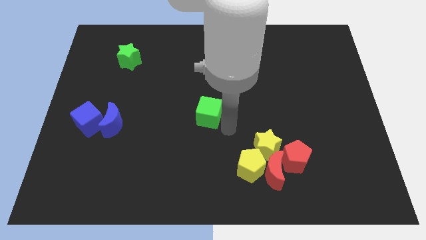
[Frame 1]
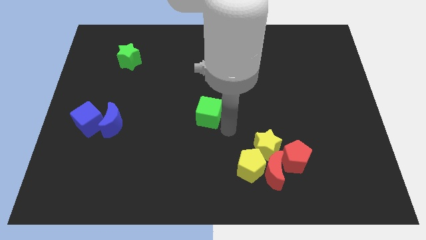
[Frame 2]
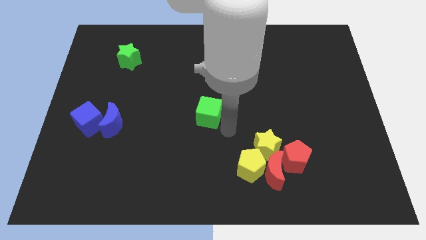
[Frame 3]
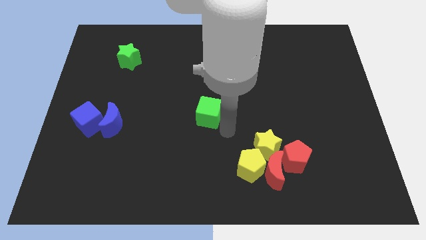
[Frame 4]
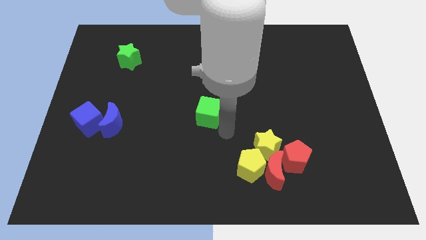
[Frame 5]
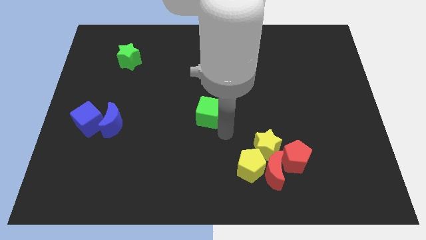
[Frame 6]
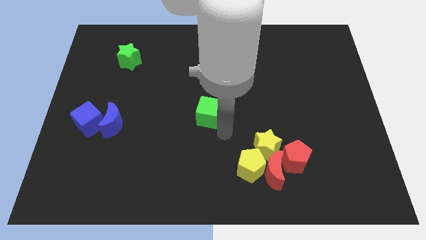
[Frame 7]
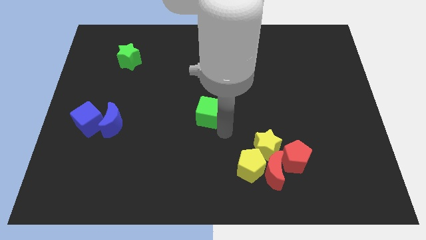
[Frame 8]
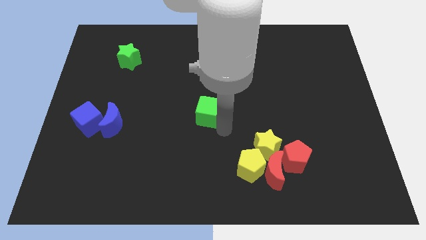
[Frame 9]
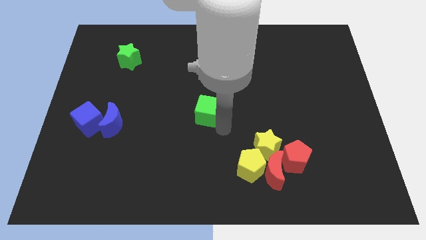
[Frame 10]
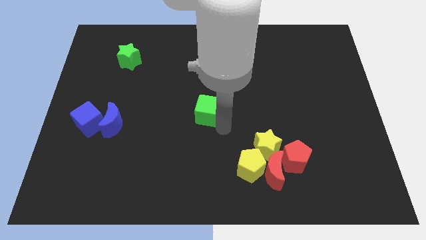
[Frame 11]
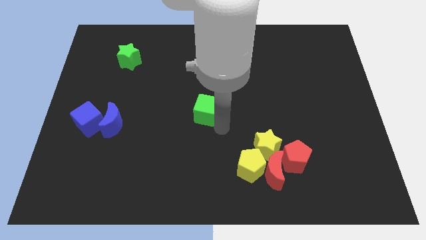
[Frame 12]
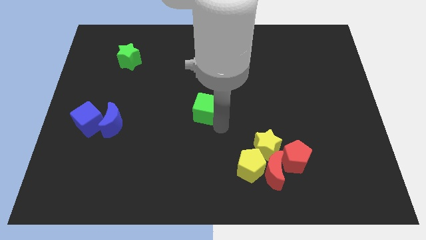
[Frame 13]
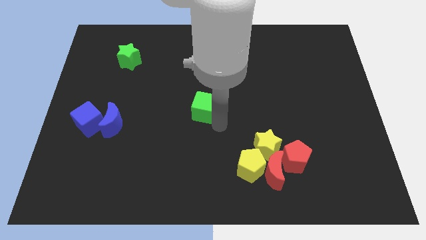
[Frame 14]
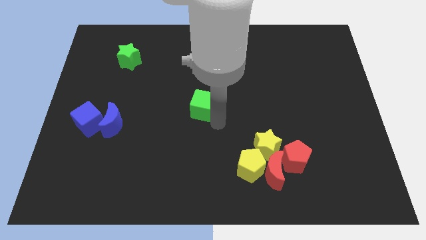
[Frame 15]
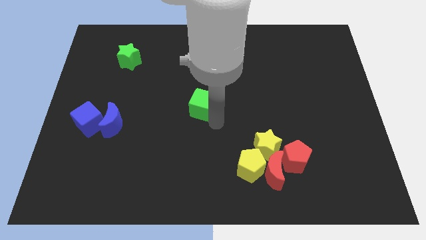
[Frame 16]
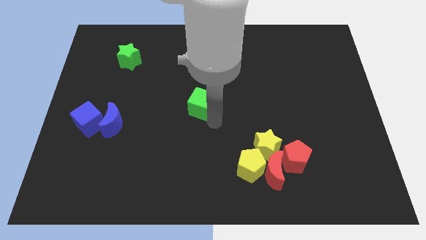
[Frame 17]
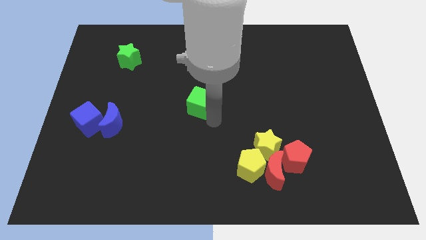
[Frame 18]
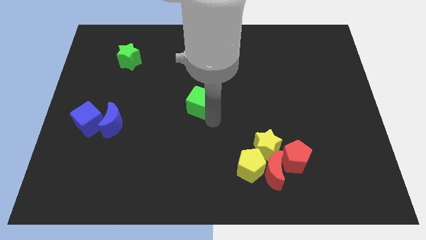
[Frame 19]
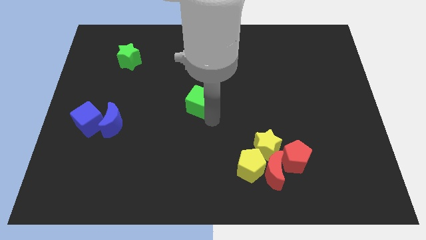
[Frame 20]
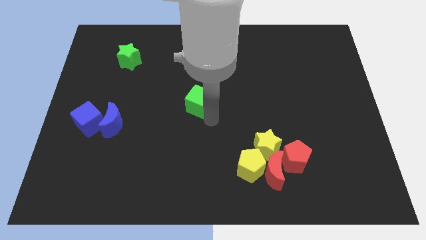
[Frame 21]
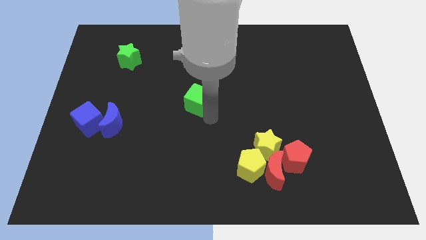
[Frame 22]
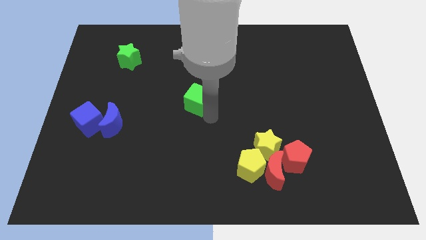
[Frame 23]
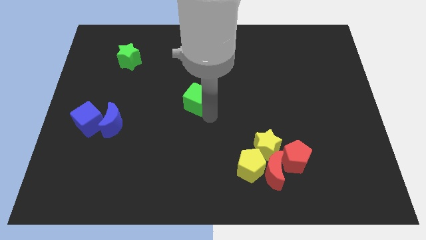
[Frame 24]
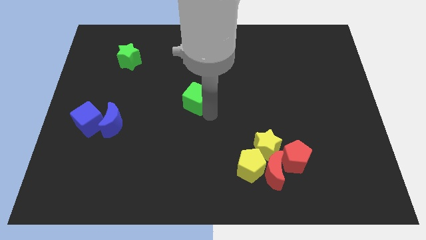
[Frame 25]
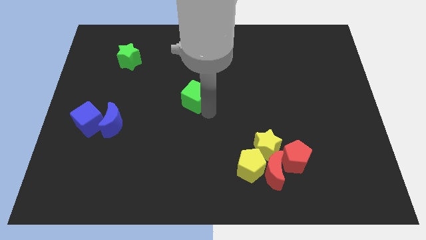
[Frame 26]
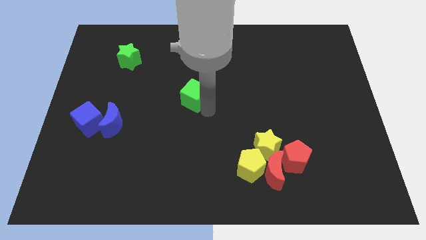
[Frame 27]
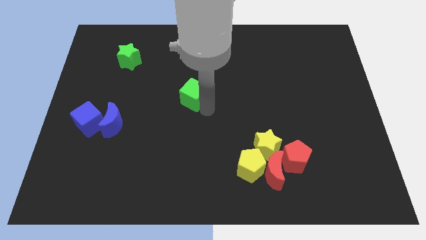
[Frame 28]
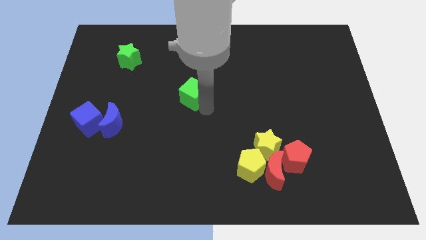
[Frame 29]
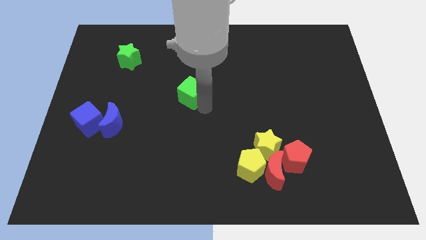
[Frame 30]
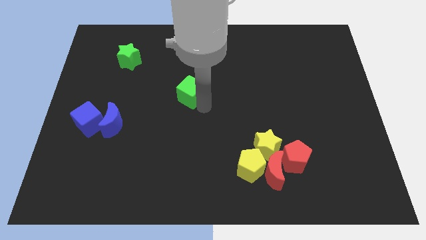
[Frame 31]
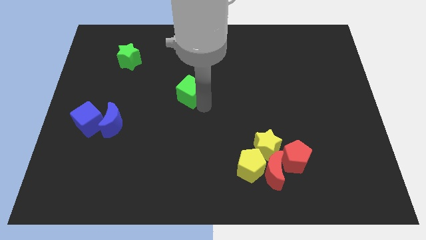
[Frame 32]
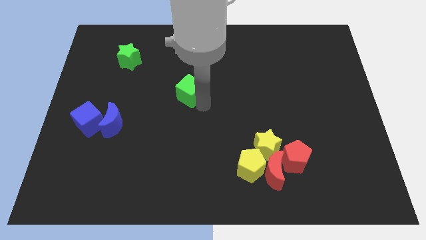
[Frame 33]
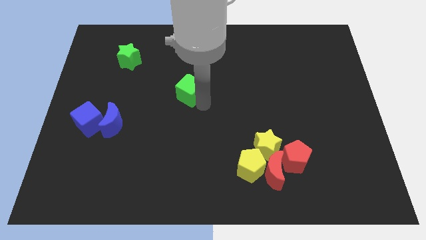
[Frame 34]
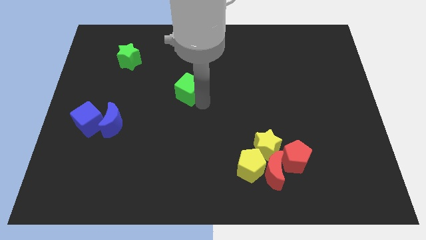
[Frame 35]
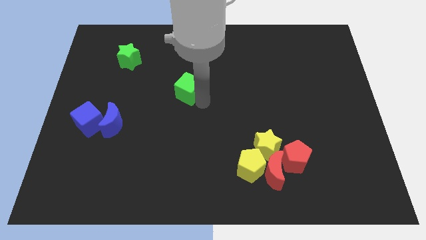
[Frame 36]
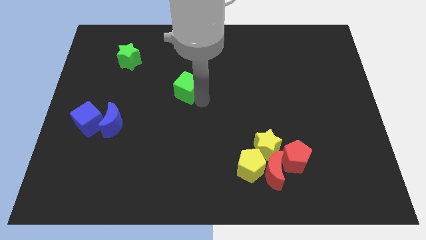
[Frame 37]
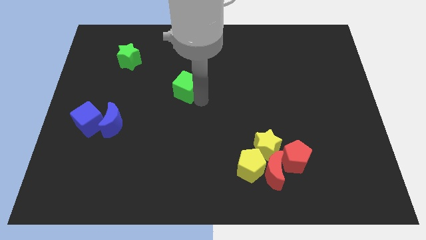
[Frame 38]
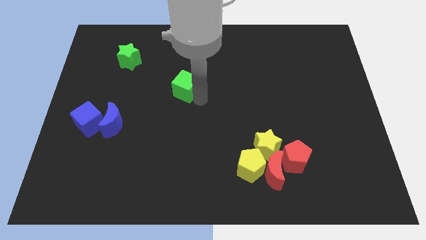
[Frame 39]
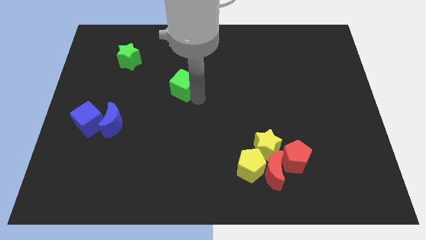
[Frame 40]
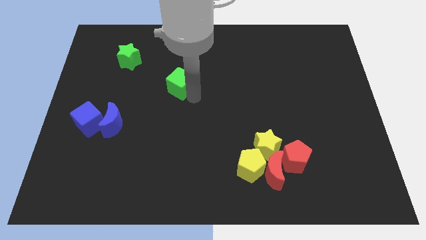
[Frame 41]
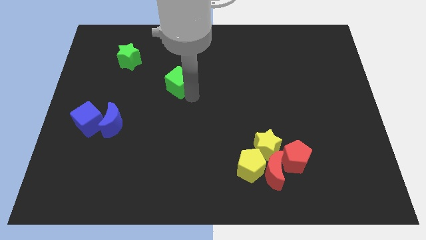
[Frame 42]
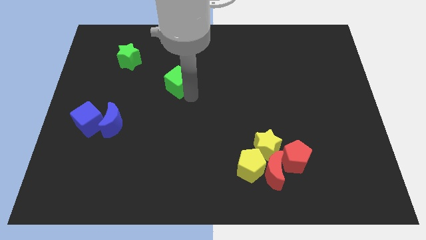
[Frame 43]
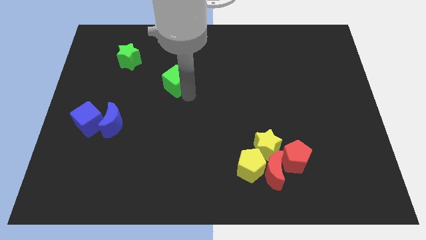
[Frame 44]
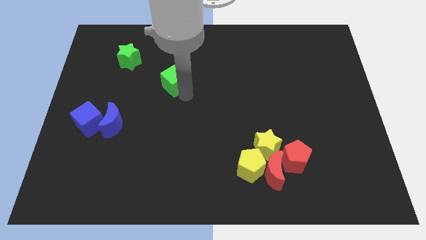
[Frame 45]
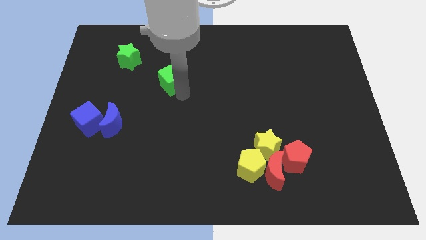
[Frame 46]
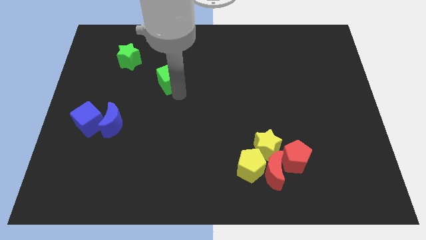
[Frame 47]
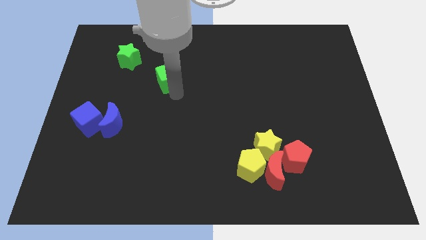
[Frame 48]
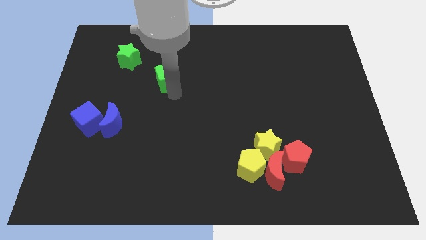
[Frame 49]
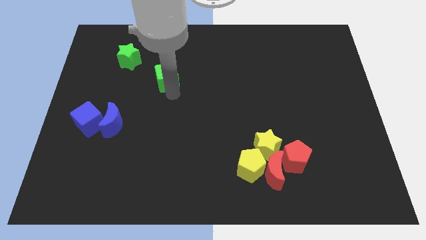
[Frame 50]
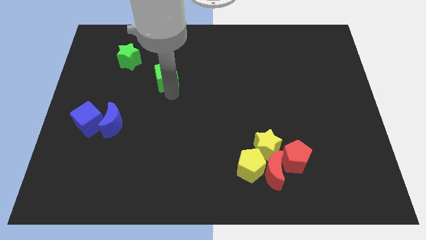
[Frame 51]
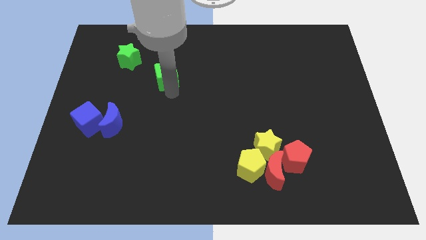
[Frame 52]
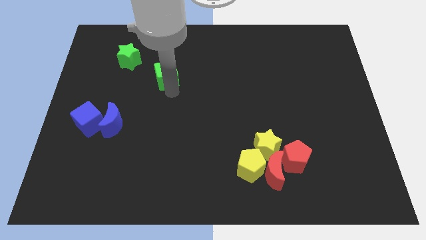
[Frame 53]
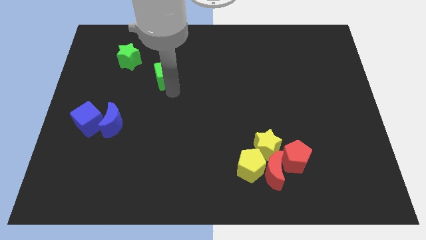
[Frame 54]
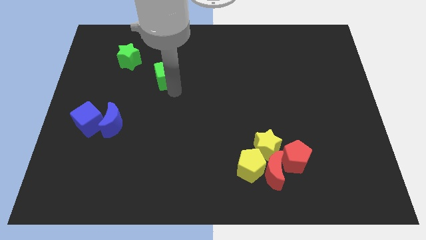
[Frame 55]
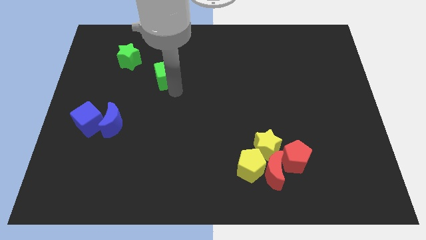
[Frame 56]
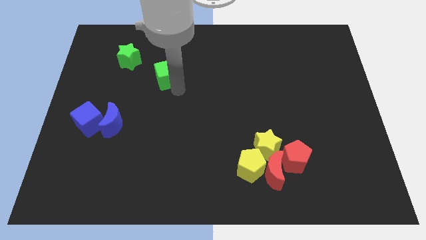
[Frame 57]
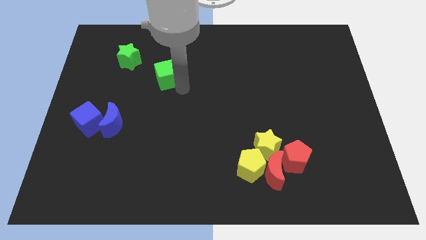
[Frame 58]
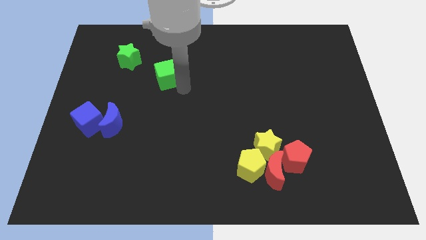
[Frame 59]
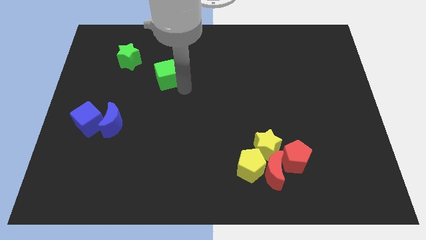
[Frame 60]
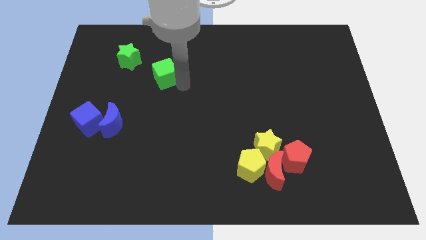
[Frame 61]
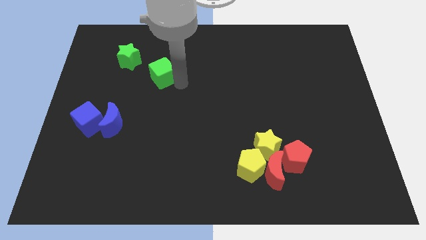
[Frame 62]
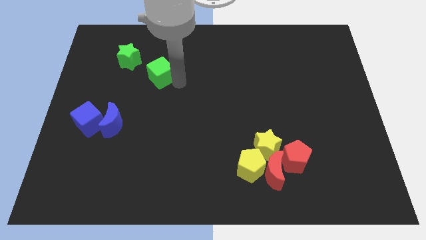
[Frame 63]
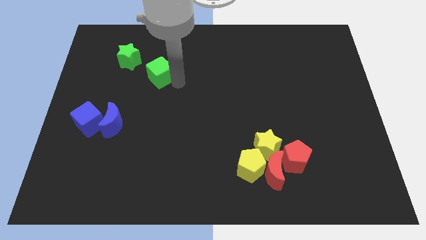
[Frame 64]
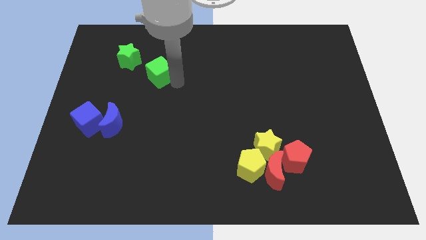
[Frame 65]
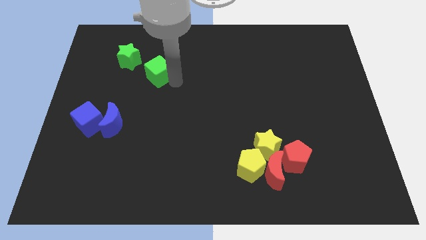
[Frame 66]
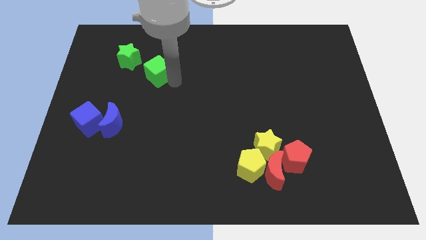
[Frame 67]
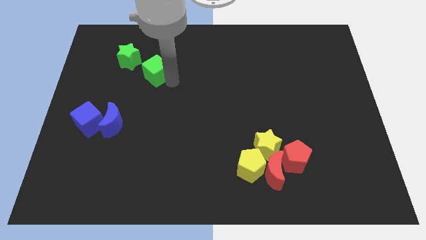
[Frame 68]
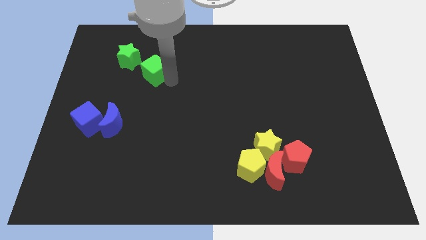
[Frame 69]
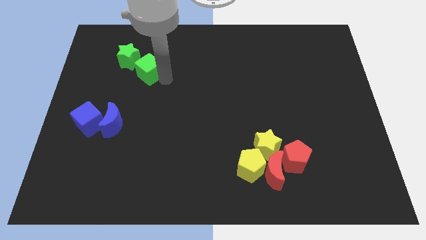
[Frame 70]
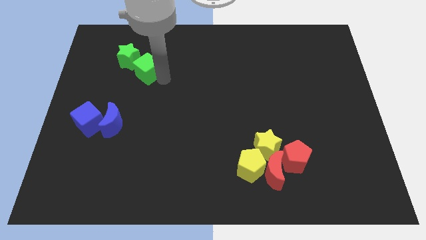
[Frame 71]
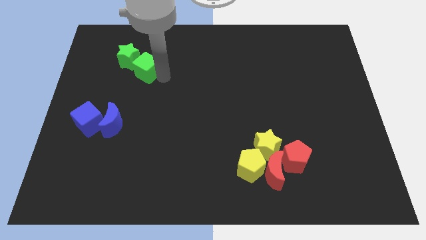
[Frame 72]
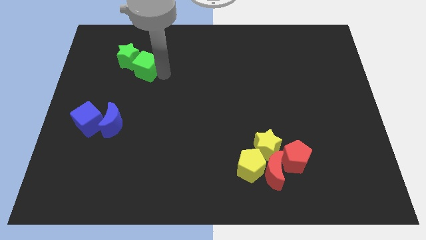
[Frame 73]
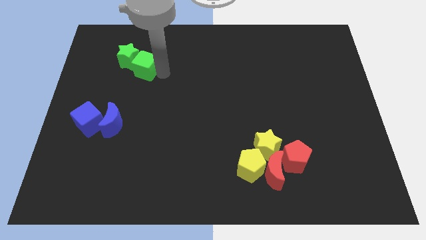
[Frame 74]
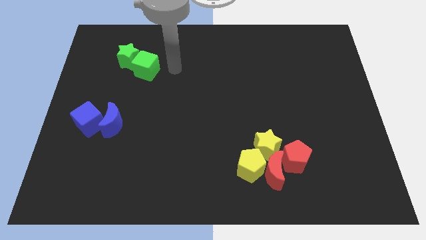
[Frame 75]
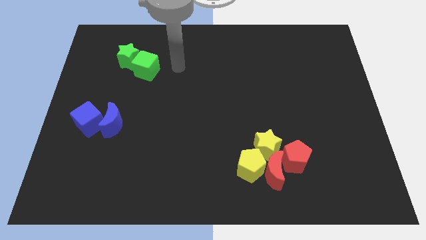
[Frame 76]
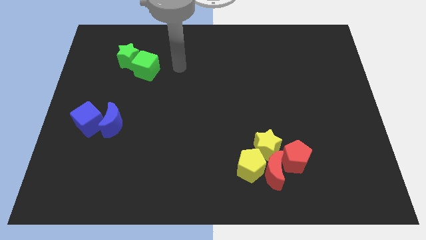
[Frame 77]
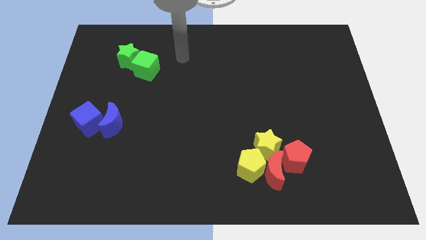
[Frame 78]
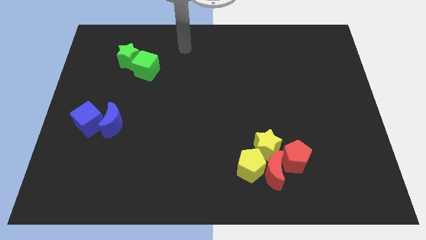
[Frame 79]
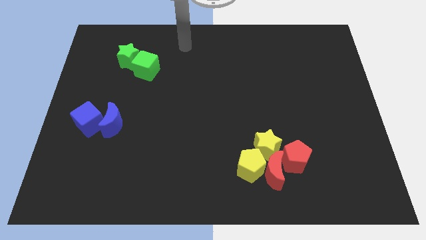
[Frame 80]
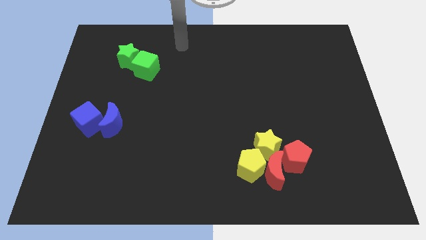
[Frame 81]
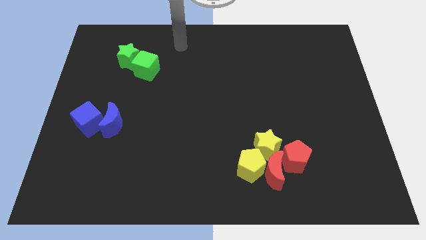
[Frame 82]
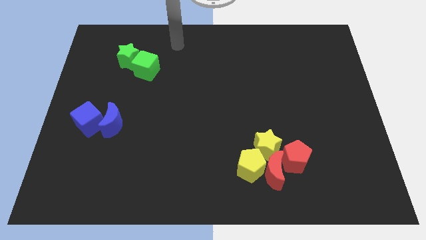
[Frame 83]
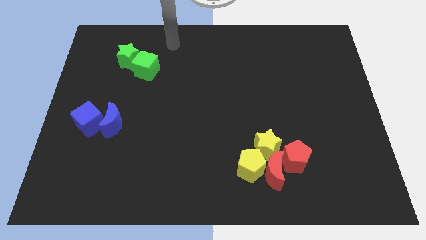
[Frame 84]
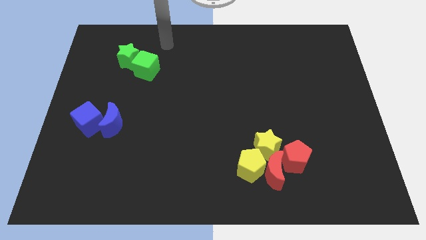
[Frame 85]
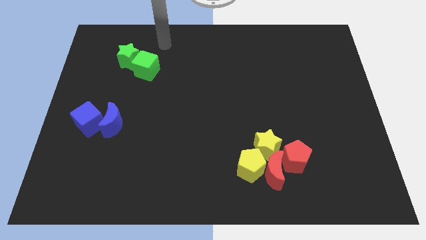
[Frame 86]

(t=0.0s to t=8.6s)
push the green cube towards the green star

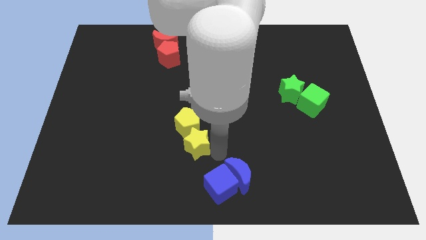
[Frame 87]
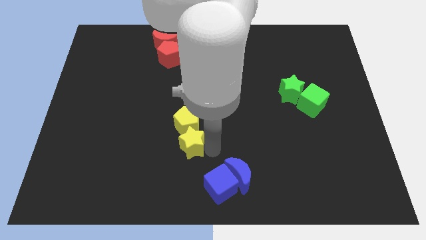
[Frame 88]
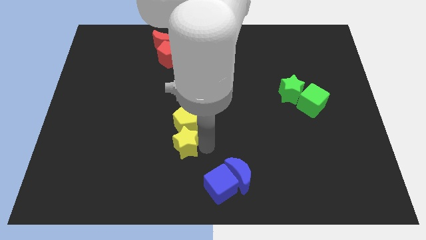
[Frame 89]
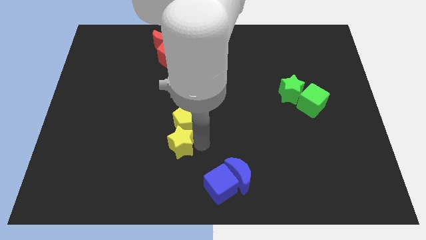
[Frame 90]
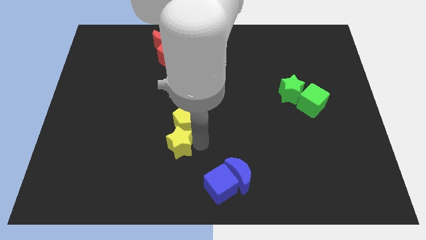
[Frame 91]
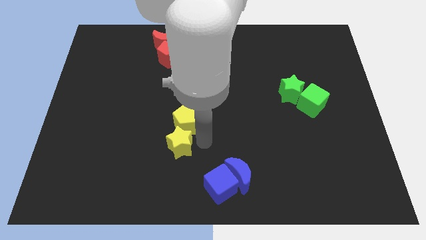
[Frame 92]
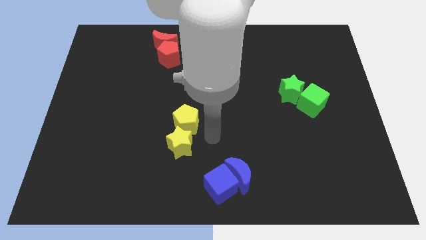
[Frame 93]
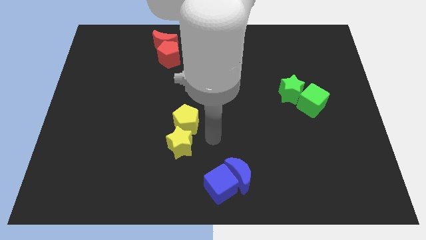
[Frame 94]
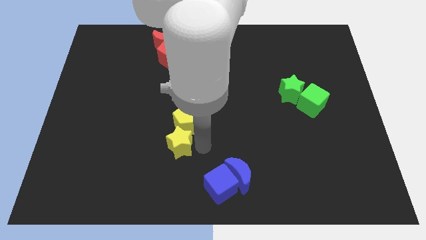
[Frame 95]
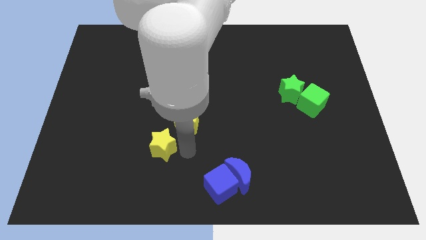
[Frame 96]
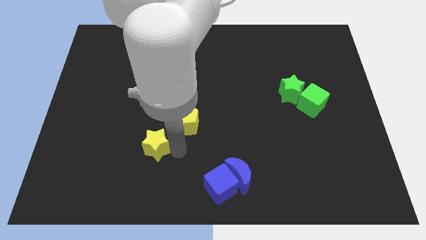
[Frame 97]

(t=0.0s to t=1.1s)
separate yellow star from the yellow pentagon
